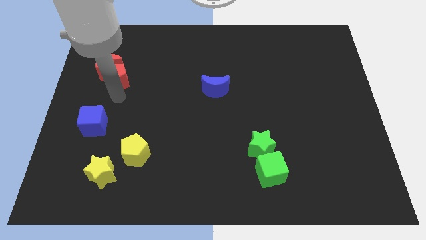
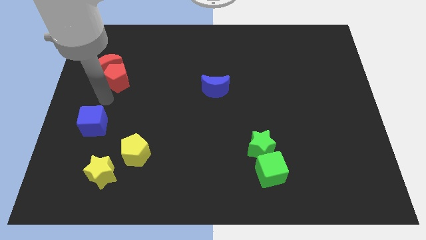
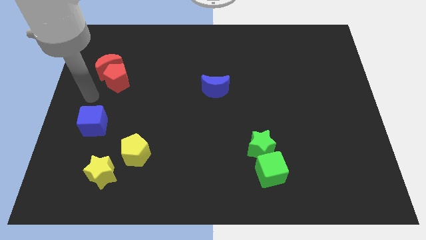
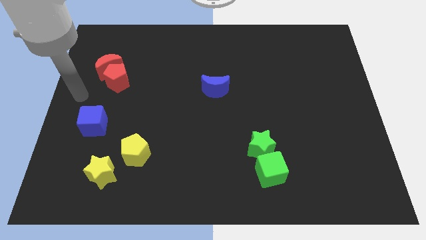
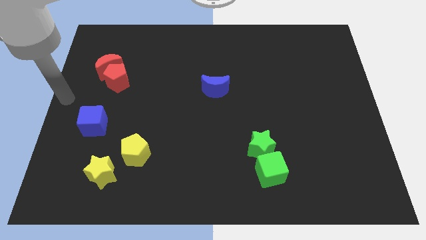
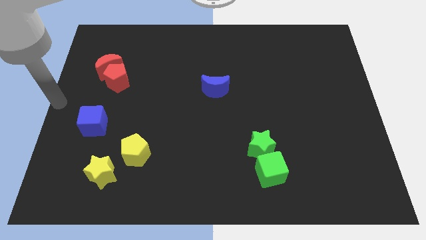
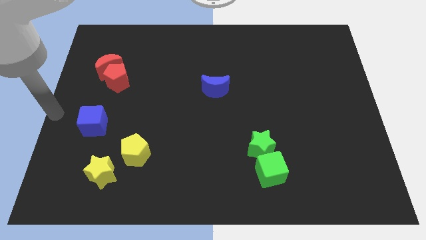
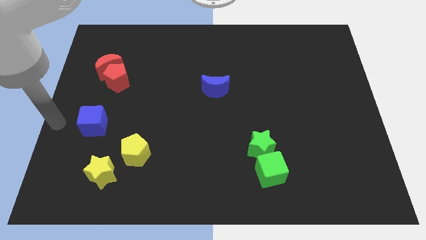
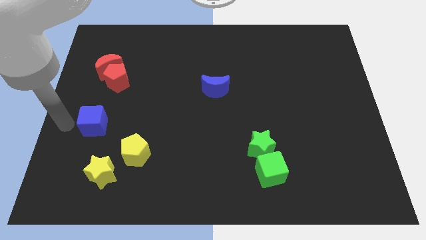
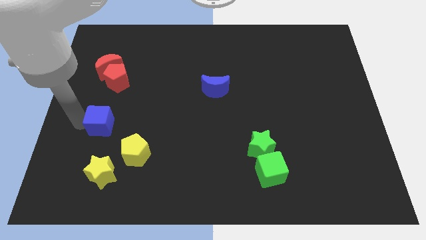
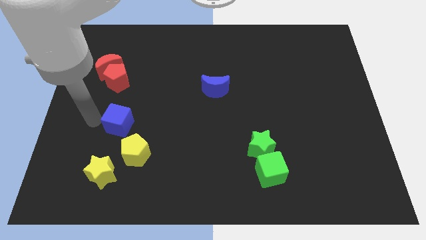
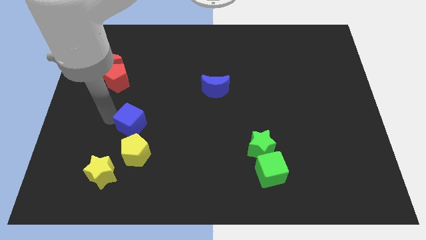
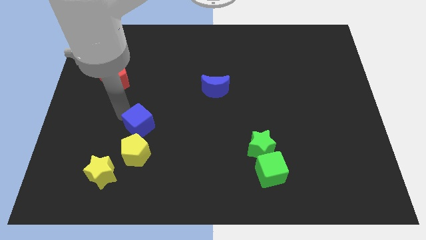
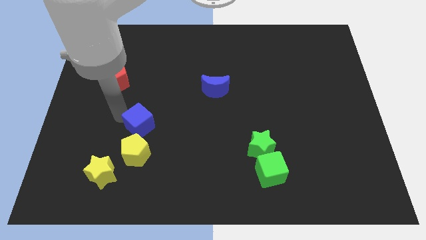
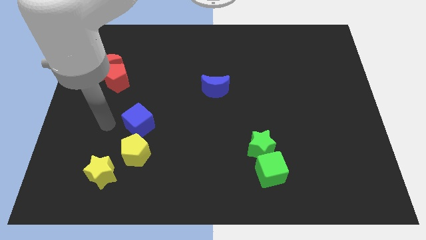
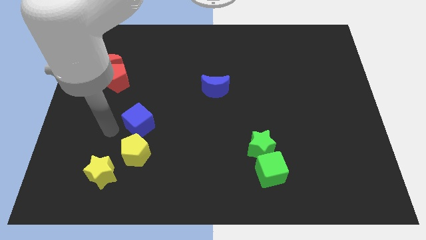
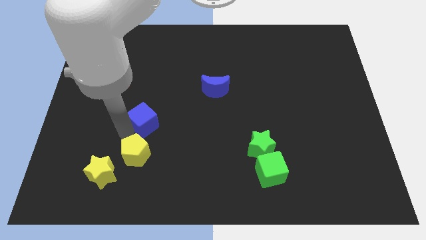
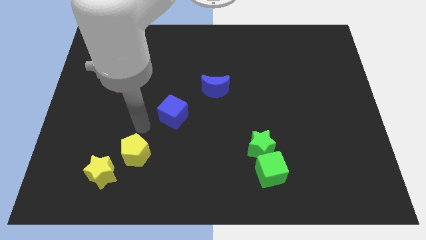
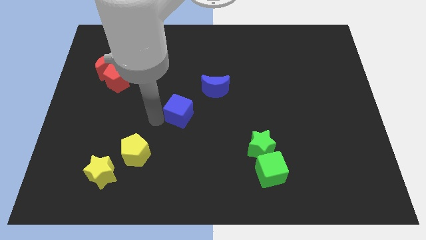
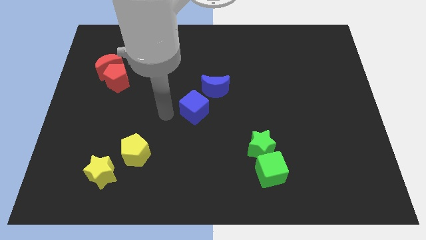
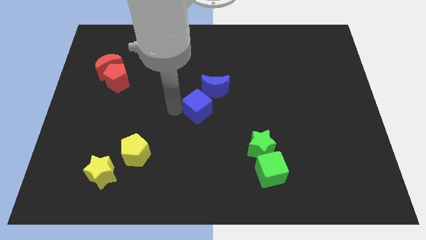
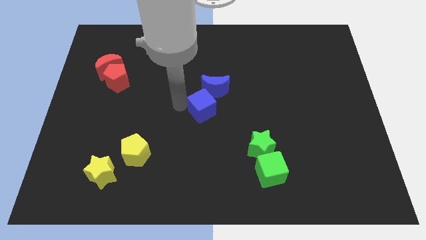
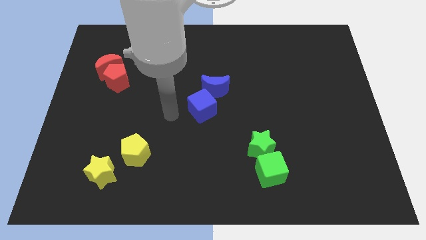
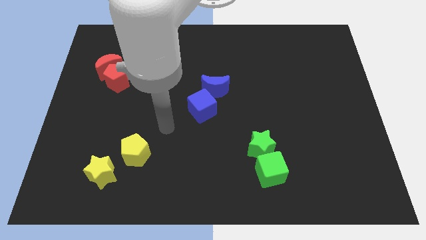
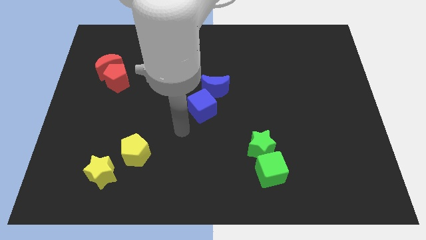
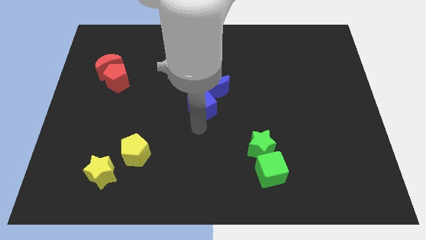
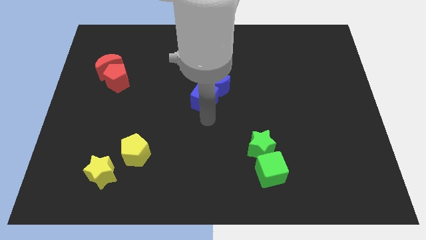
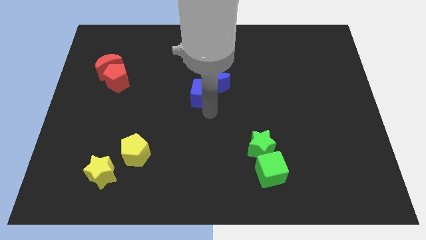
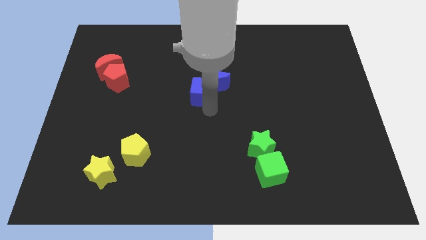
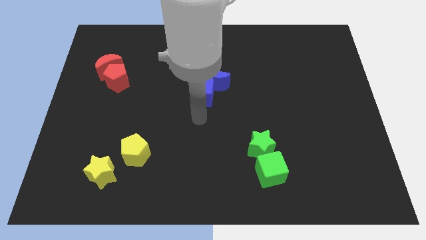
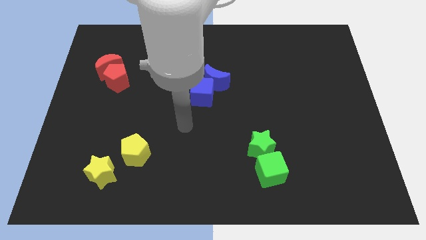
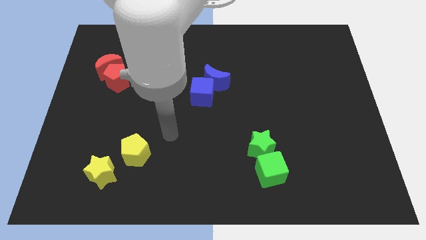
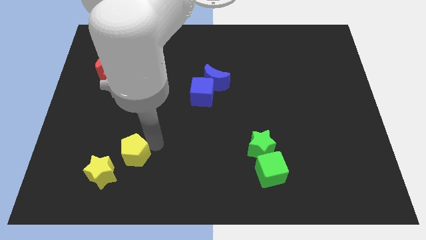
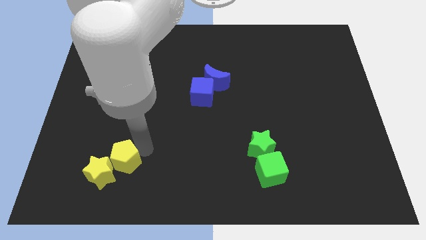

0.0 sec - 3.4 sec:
put the blue cube at the bottom left of the blue moon

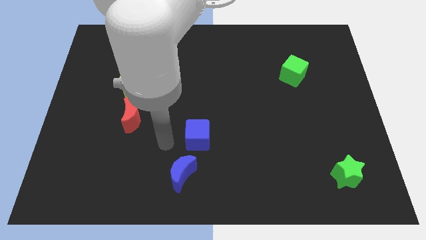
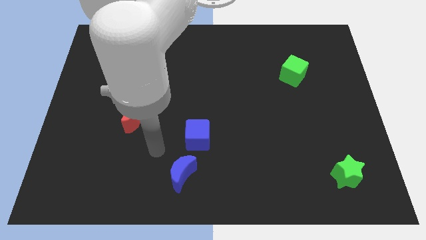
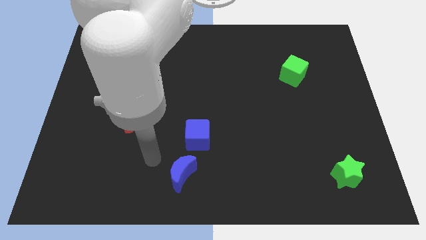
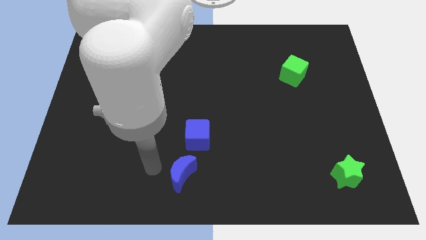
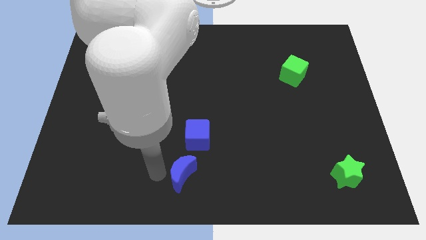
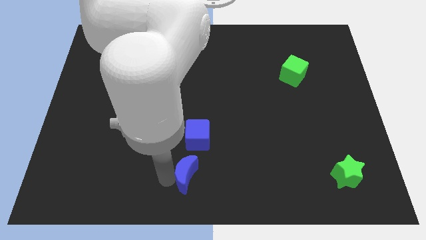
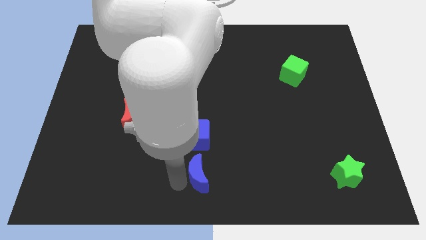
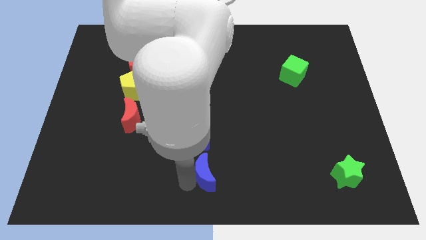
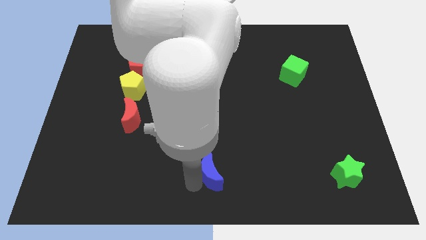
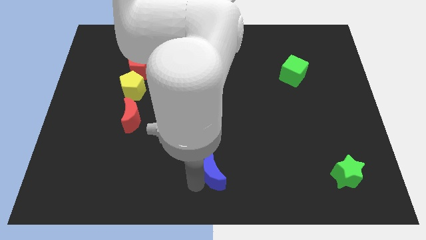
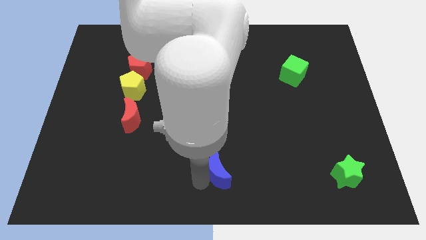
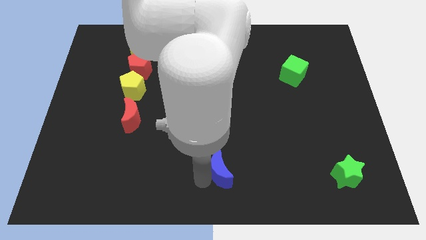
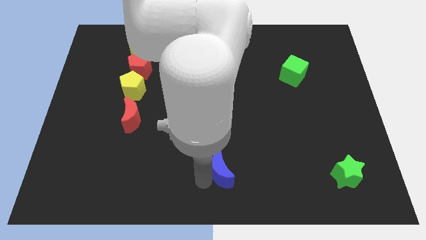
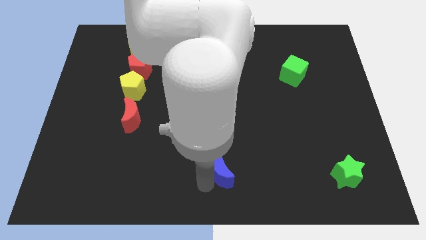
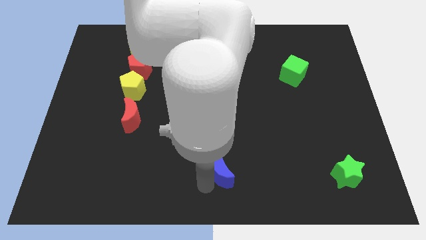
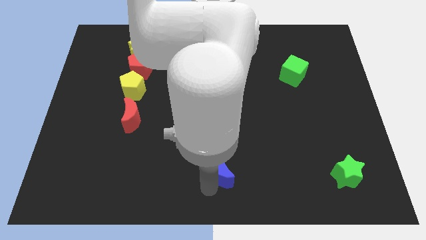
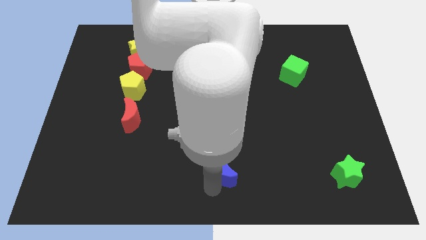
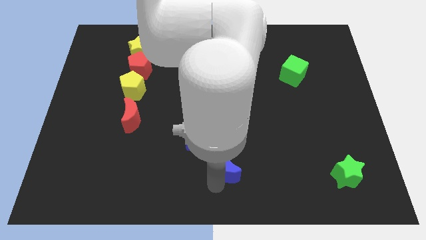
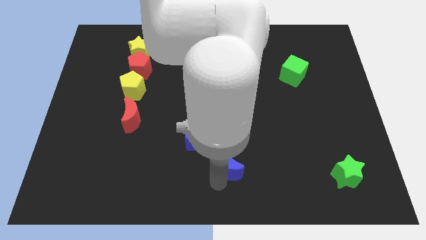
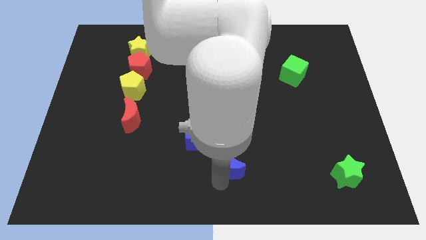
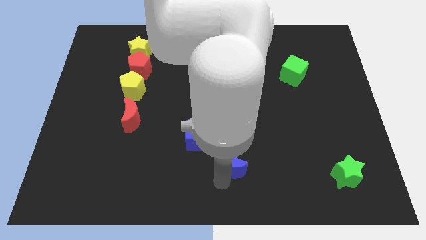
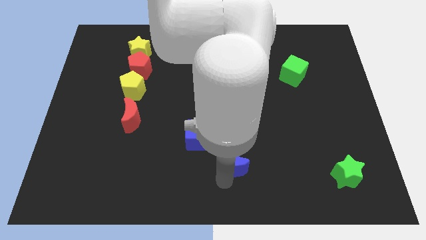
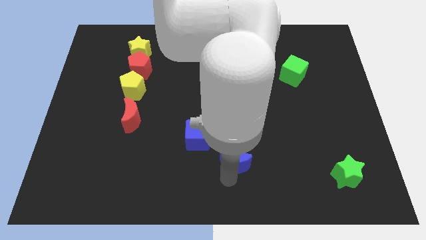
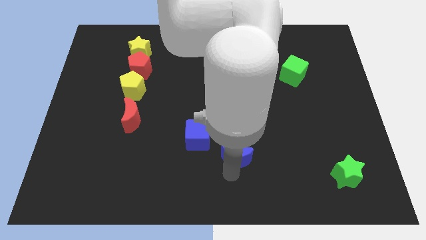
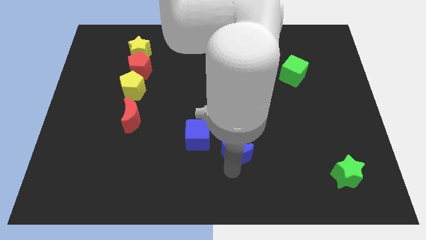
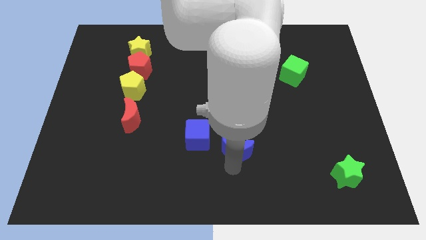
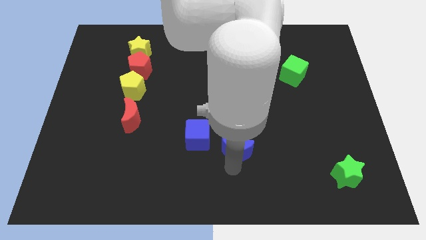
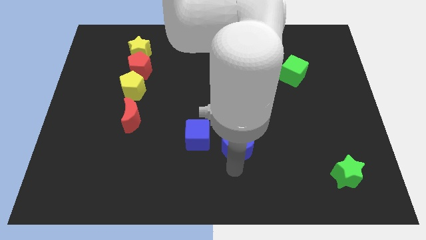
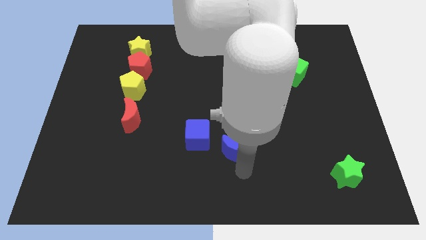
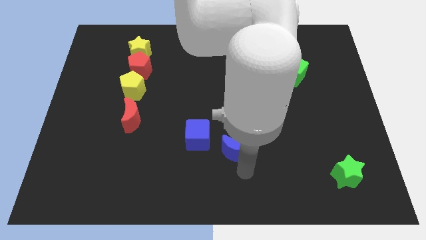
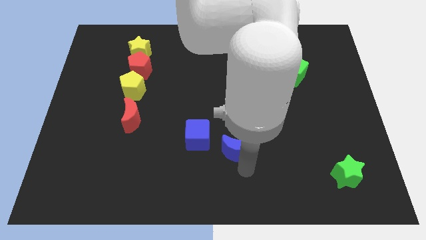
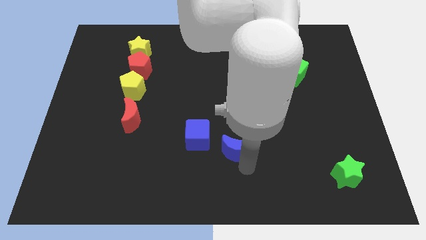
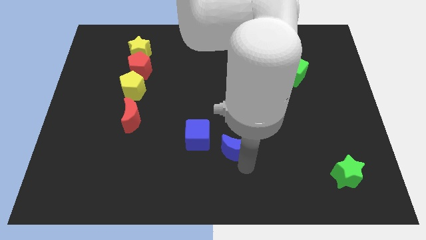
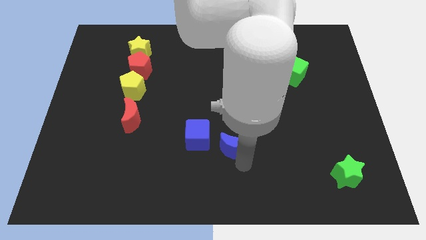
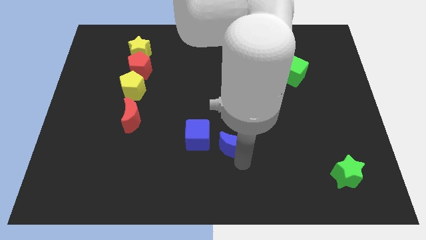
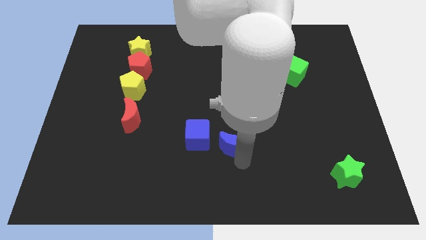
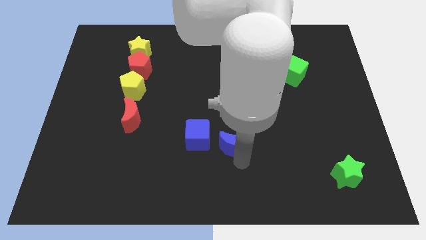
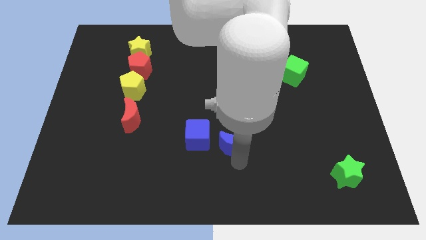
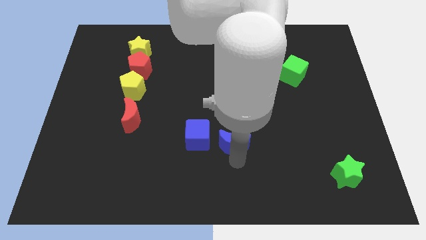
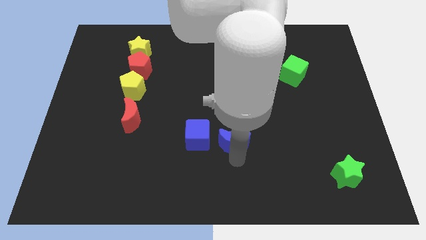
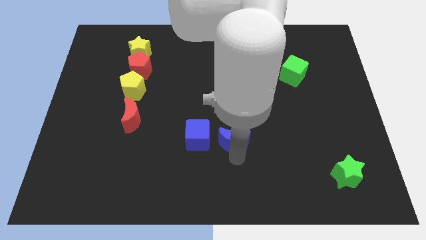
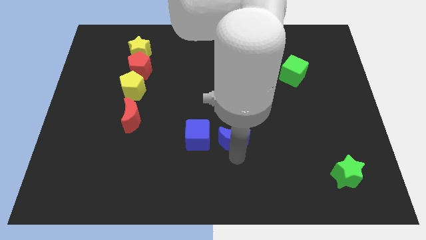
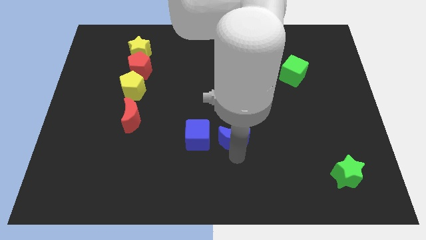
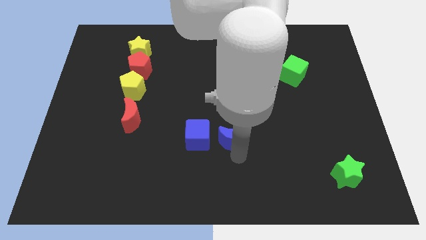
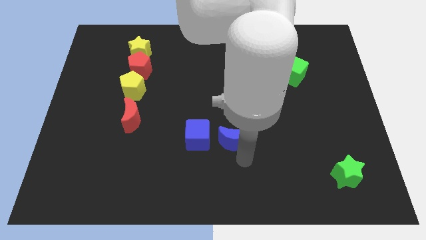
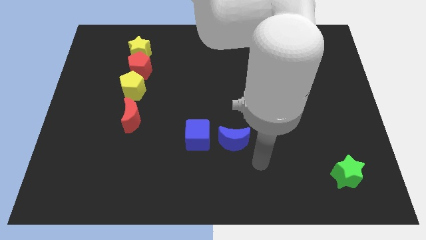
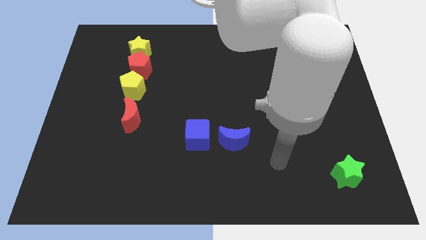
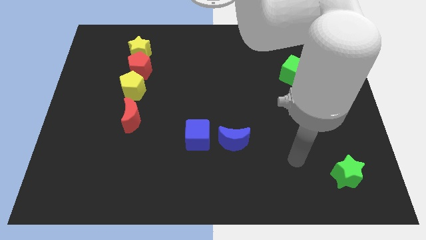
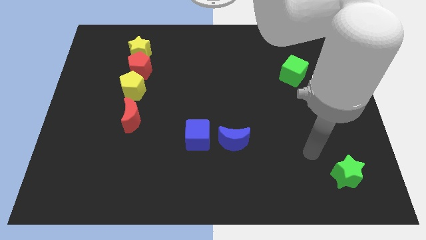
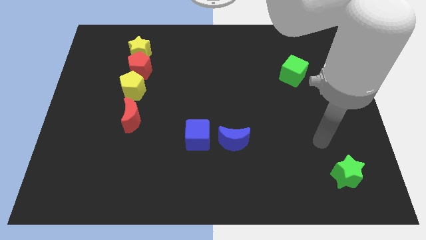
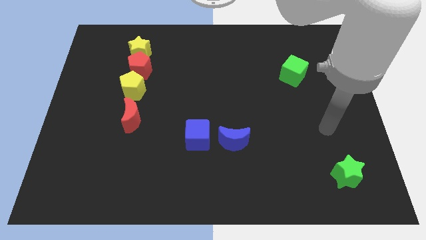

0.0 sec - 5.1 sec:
place blue moon to the right of blue cube
